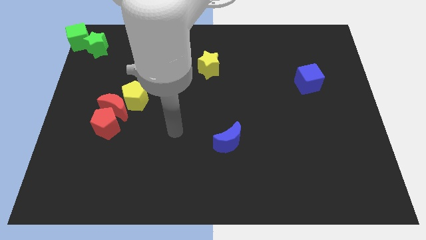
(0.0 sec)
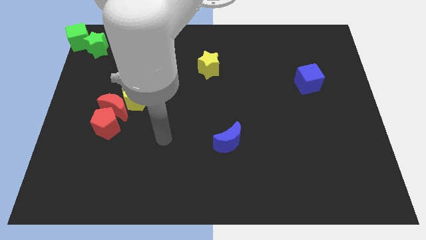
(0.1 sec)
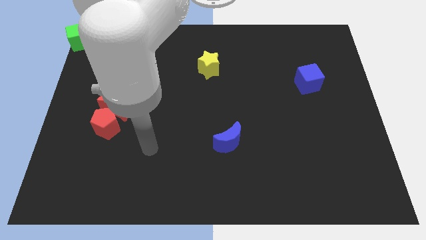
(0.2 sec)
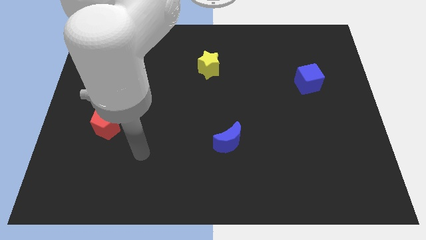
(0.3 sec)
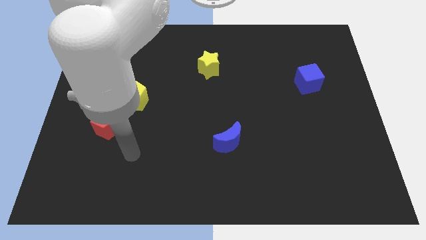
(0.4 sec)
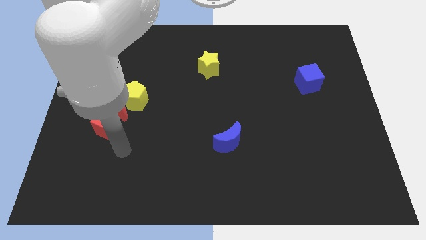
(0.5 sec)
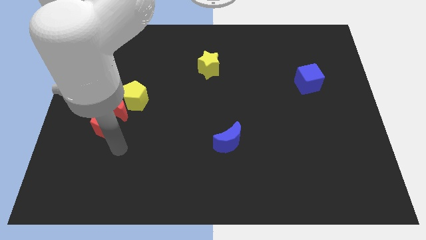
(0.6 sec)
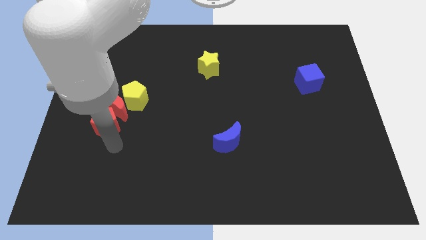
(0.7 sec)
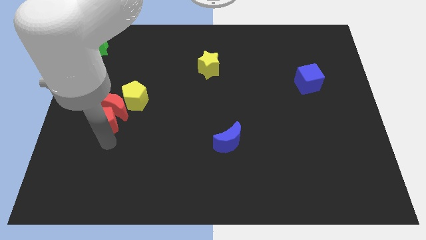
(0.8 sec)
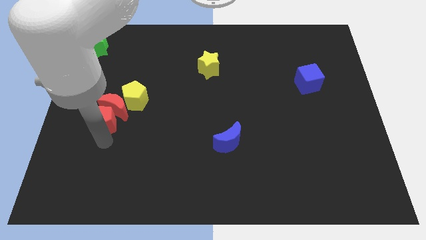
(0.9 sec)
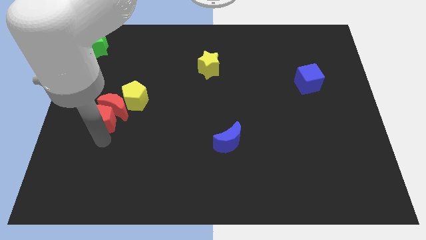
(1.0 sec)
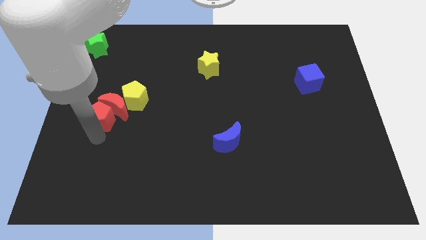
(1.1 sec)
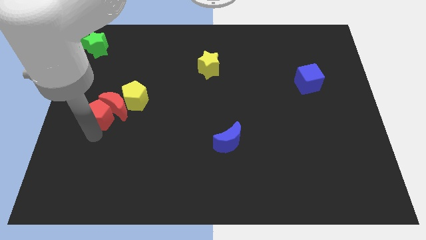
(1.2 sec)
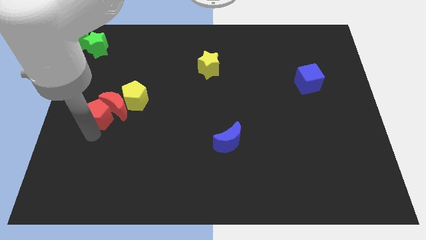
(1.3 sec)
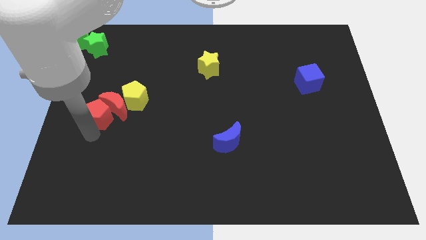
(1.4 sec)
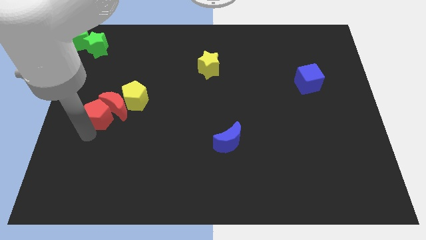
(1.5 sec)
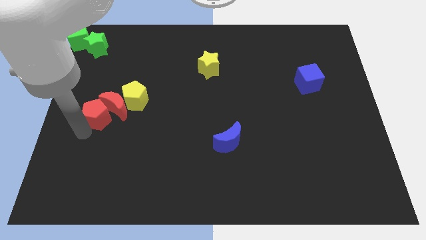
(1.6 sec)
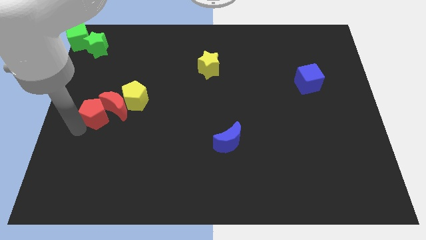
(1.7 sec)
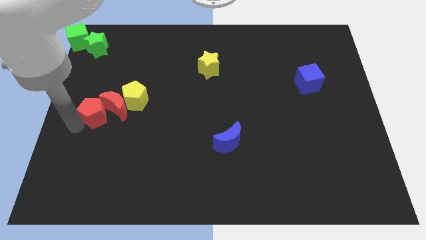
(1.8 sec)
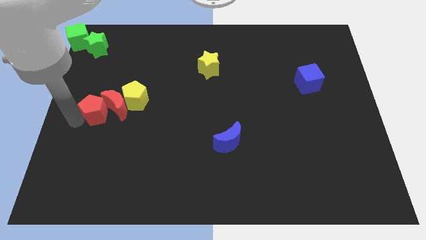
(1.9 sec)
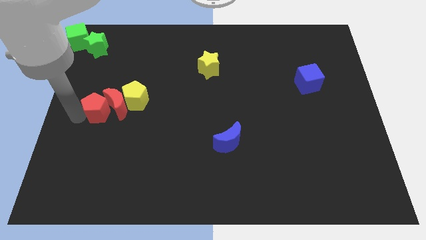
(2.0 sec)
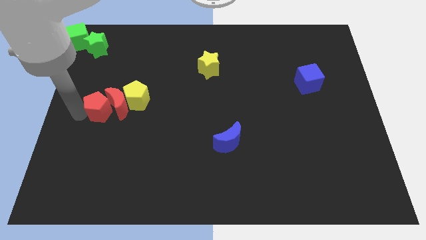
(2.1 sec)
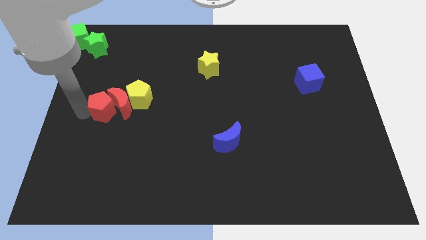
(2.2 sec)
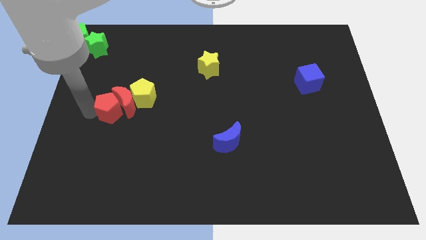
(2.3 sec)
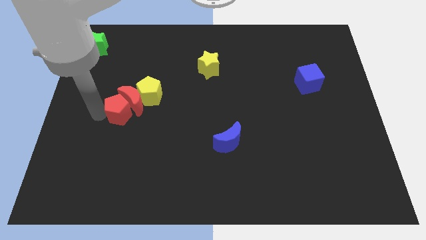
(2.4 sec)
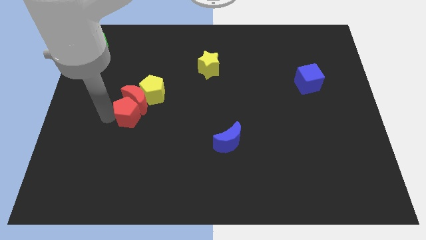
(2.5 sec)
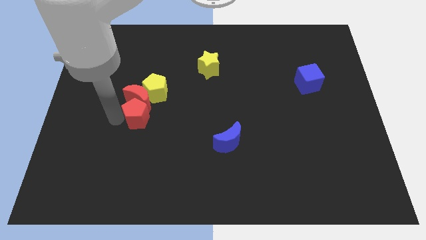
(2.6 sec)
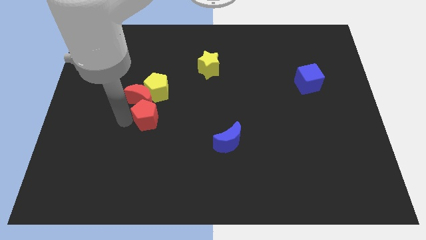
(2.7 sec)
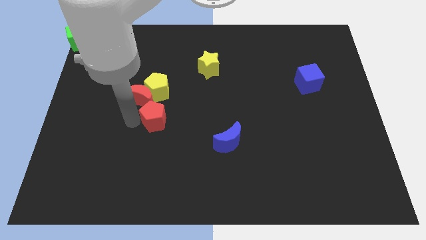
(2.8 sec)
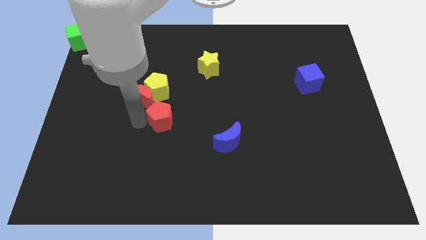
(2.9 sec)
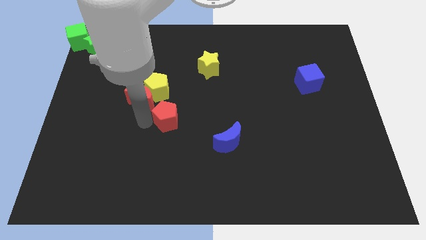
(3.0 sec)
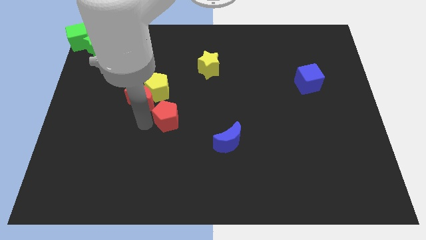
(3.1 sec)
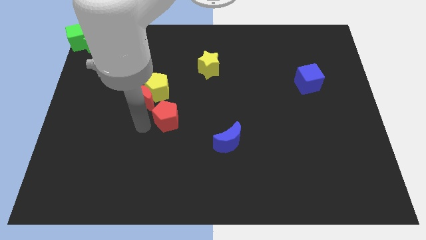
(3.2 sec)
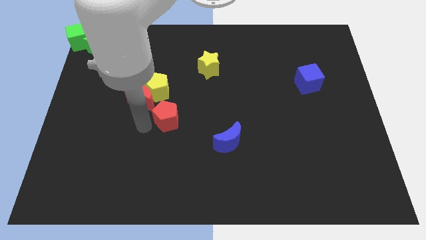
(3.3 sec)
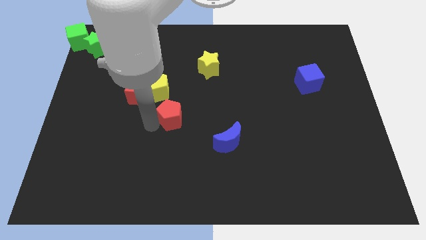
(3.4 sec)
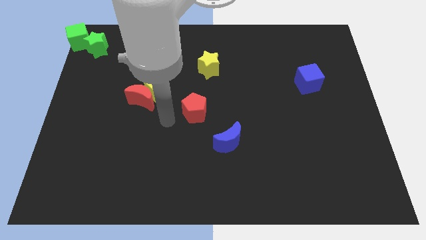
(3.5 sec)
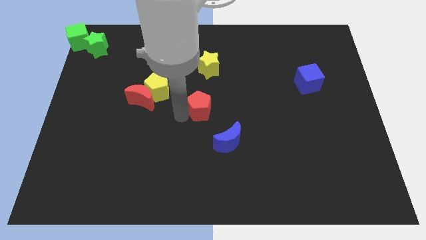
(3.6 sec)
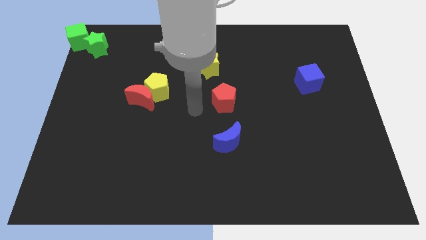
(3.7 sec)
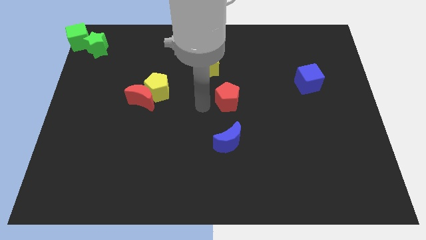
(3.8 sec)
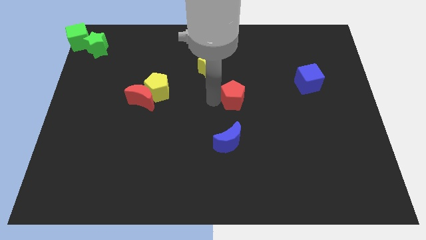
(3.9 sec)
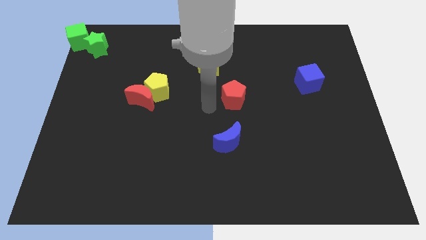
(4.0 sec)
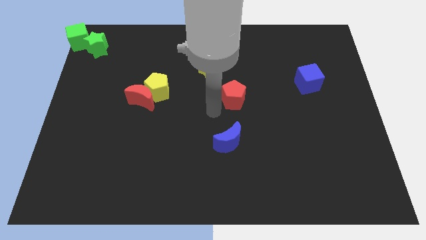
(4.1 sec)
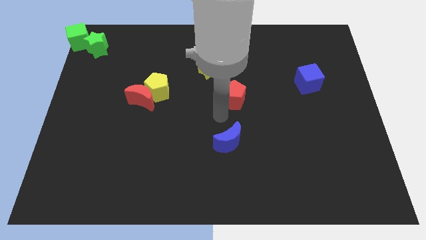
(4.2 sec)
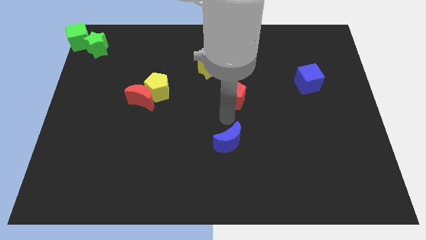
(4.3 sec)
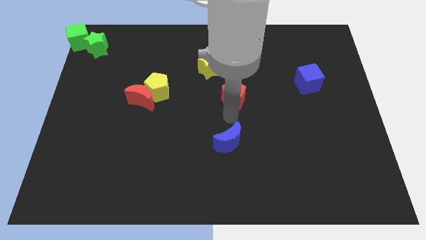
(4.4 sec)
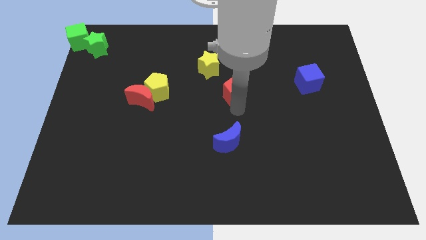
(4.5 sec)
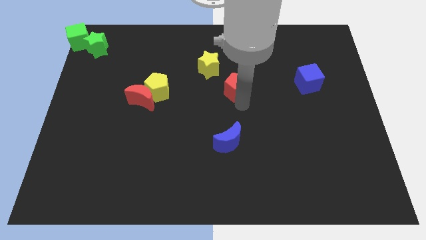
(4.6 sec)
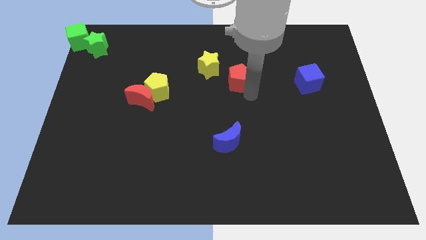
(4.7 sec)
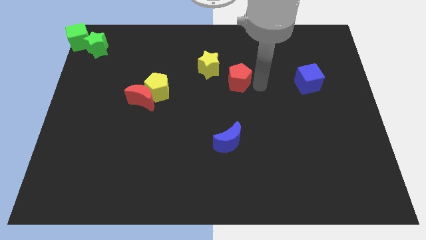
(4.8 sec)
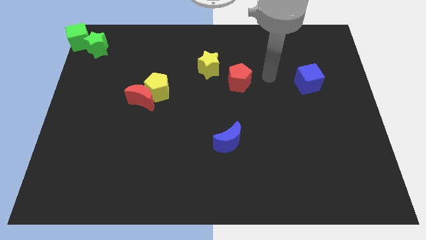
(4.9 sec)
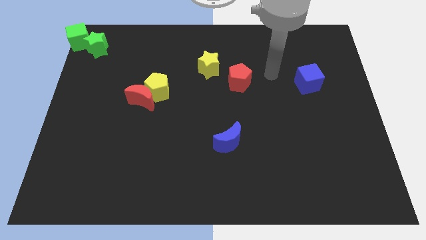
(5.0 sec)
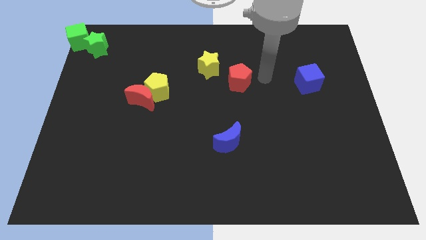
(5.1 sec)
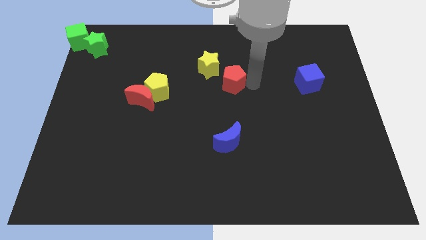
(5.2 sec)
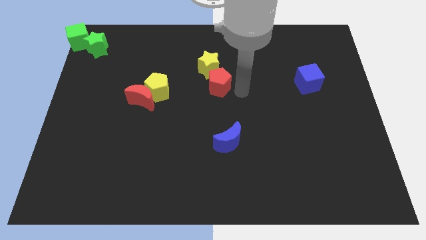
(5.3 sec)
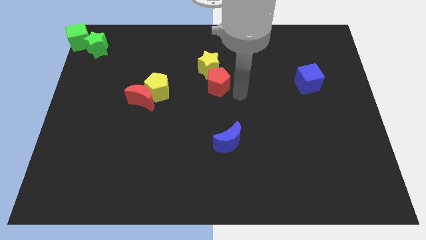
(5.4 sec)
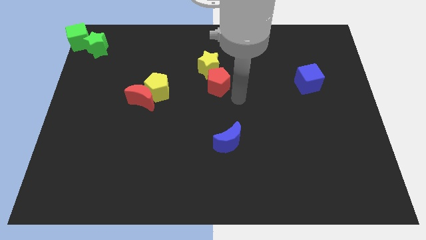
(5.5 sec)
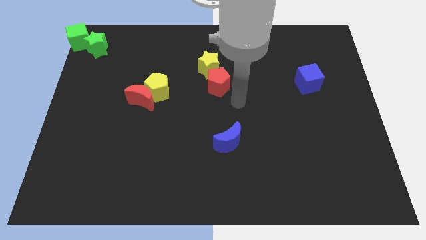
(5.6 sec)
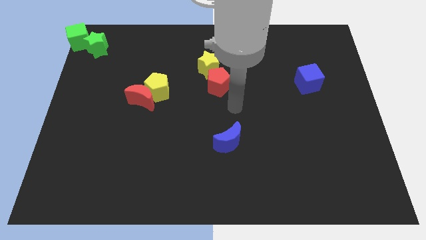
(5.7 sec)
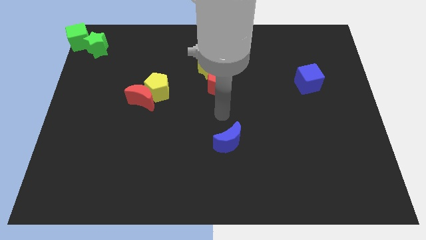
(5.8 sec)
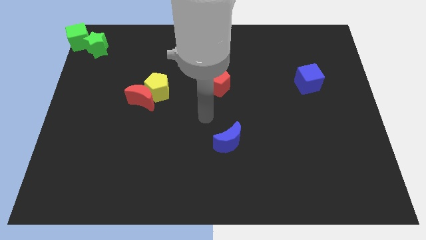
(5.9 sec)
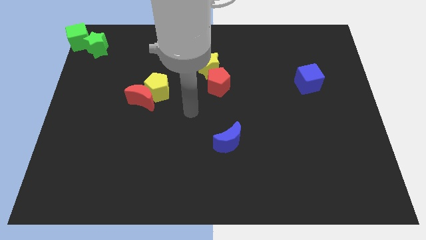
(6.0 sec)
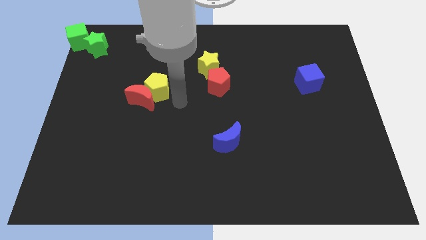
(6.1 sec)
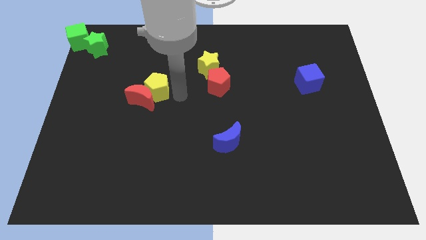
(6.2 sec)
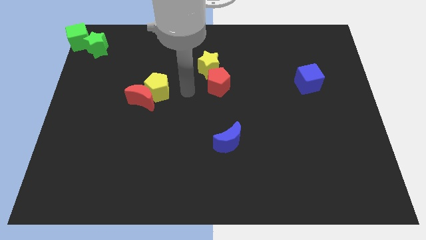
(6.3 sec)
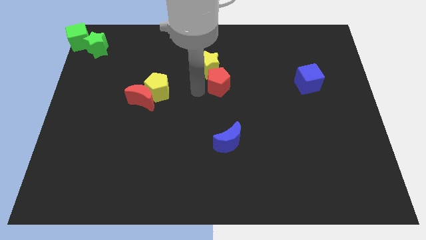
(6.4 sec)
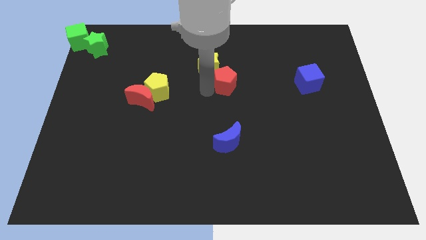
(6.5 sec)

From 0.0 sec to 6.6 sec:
place the red pentagon to the bottom right of the yellow star

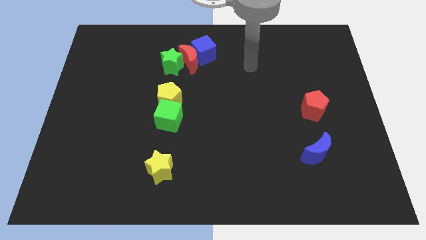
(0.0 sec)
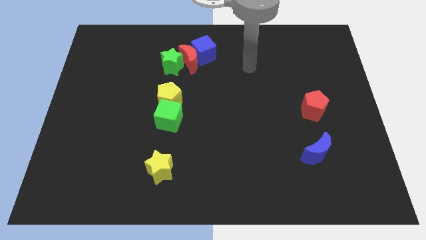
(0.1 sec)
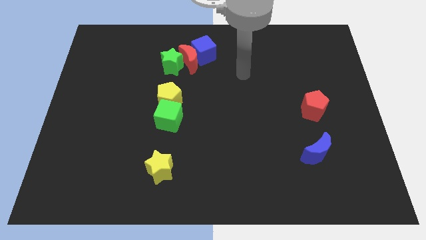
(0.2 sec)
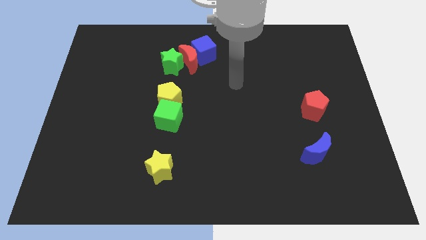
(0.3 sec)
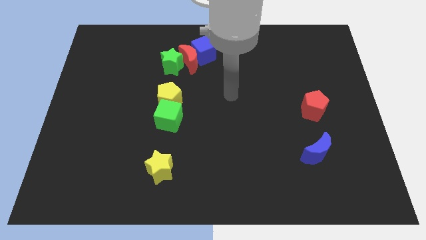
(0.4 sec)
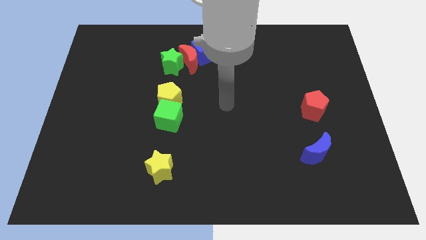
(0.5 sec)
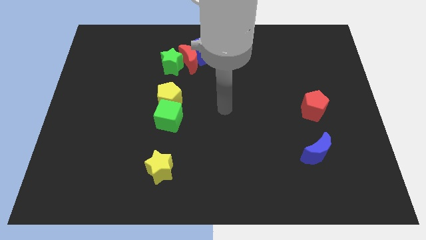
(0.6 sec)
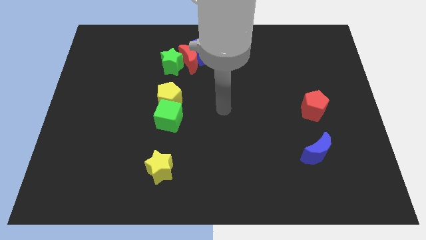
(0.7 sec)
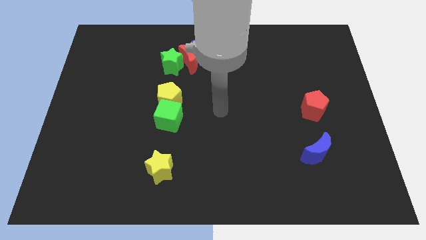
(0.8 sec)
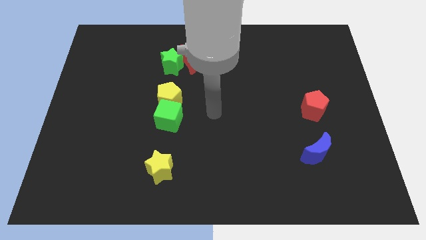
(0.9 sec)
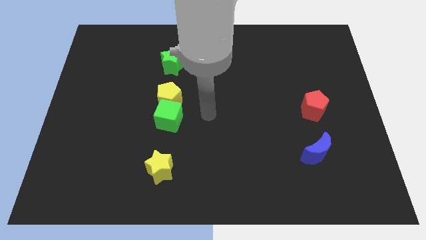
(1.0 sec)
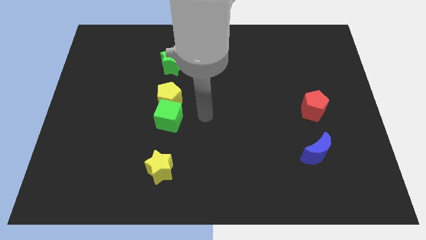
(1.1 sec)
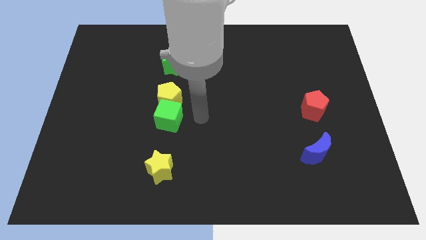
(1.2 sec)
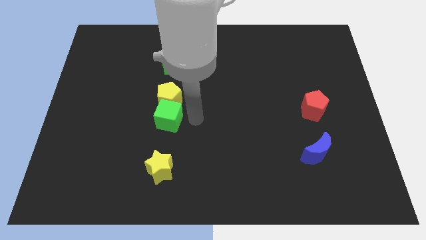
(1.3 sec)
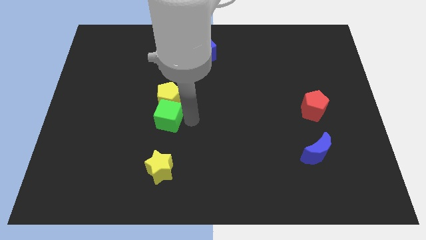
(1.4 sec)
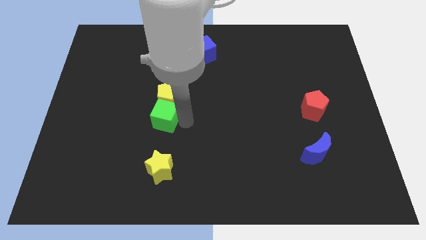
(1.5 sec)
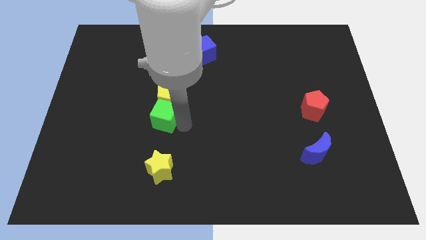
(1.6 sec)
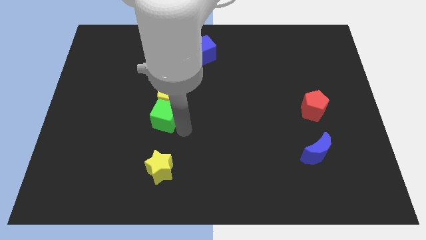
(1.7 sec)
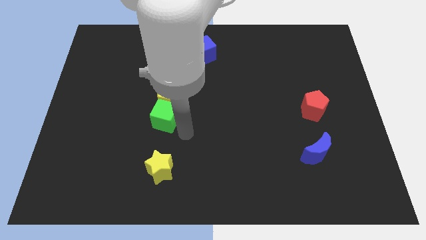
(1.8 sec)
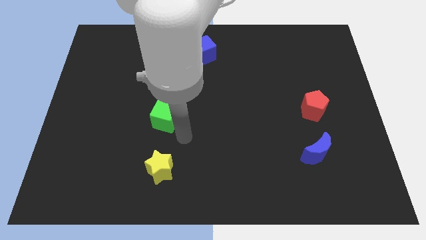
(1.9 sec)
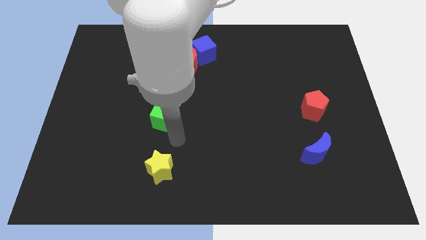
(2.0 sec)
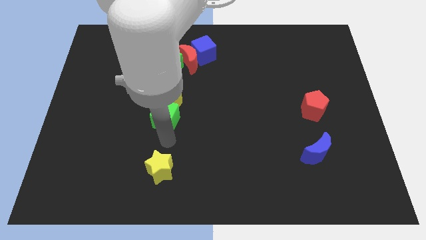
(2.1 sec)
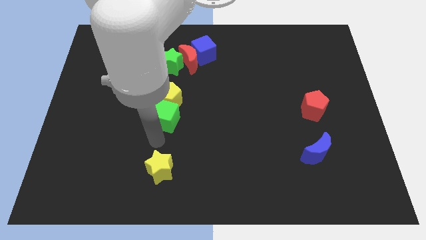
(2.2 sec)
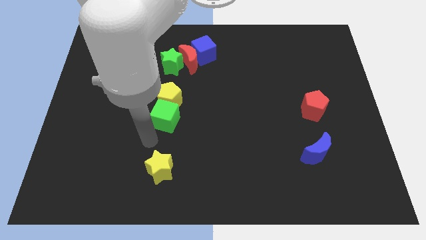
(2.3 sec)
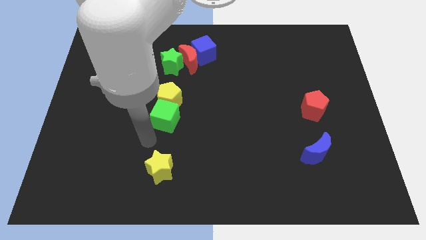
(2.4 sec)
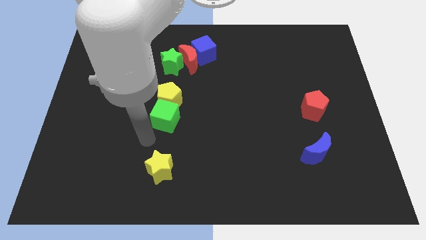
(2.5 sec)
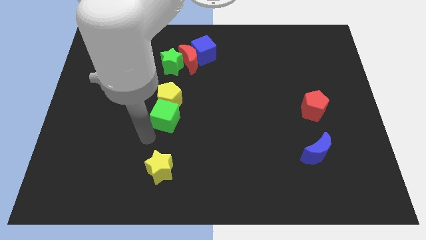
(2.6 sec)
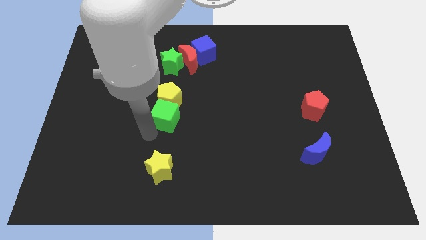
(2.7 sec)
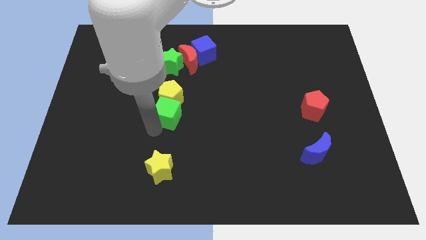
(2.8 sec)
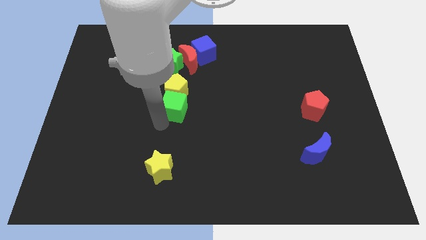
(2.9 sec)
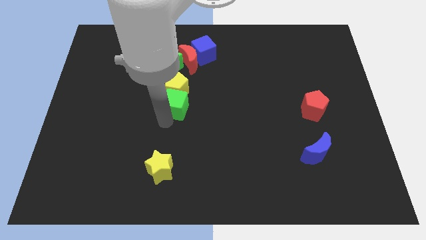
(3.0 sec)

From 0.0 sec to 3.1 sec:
move green cube near to the yellow pentagone
